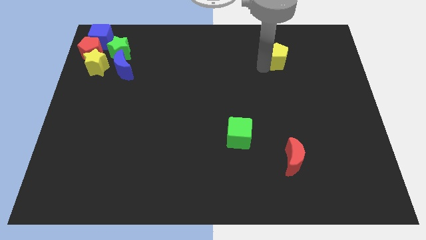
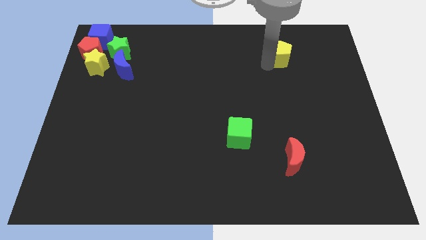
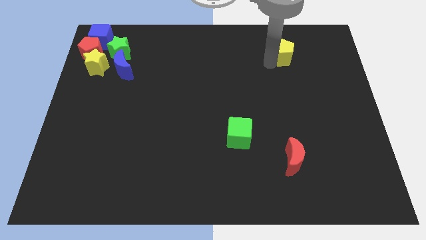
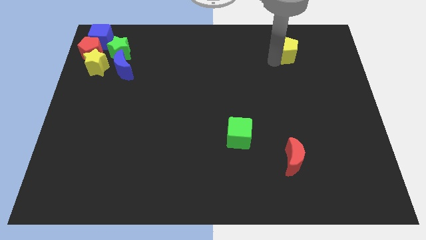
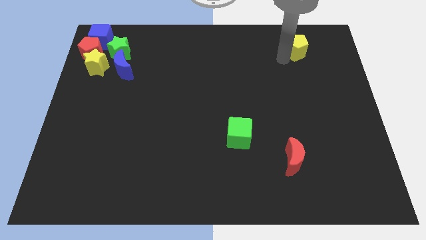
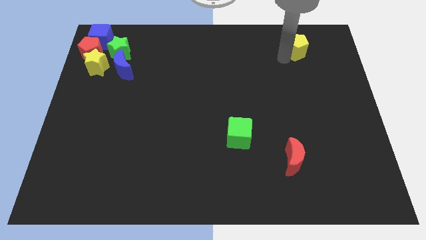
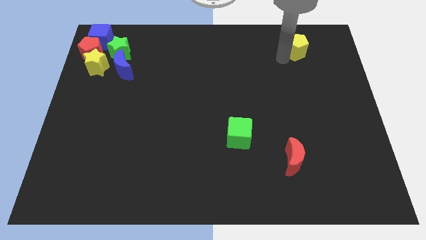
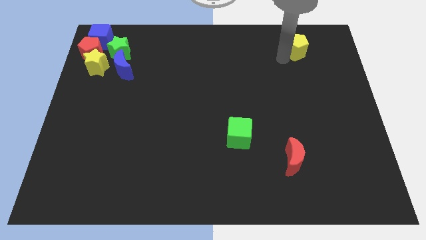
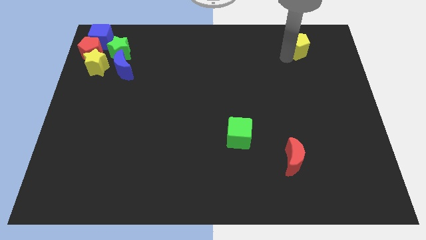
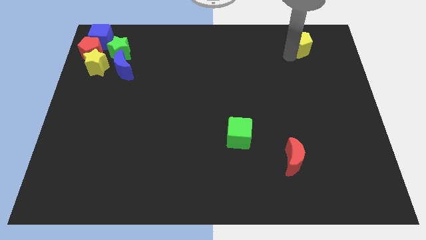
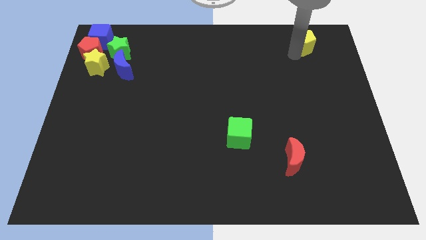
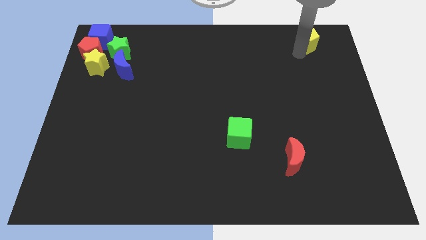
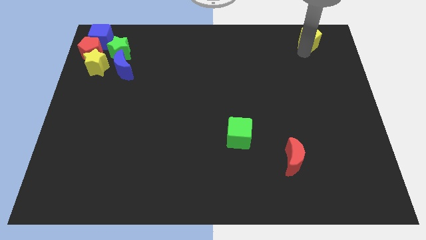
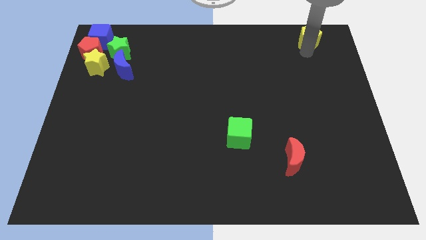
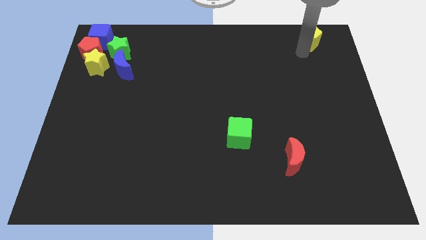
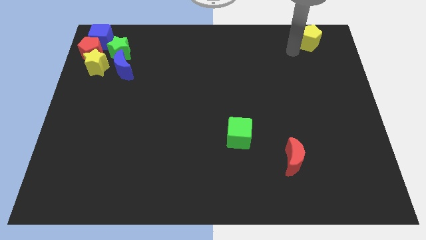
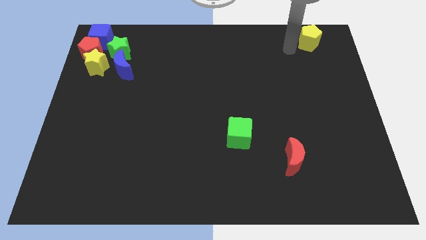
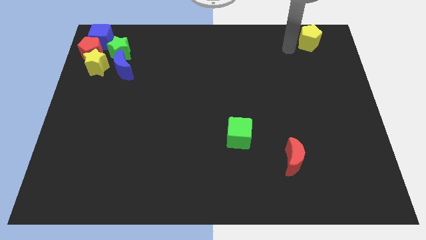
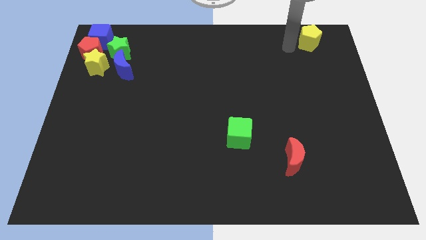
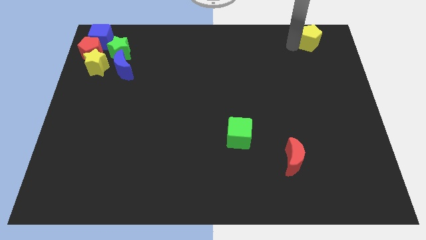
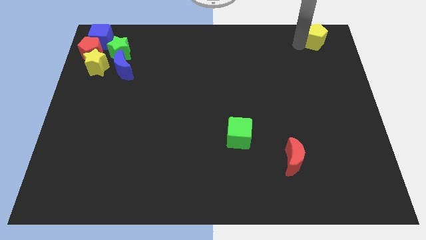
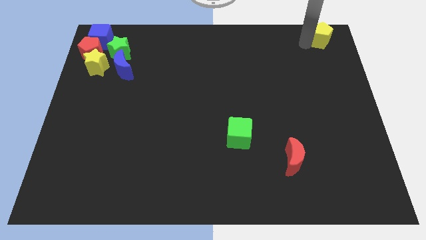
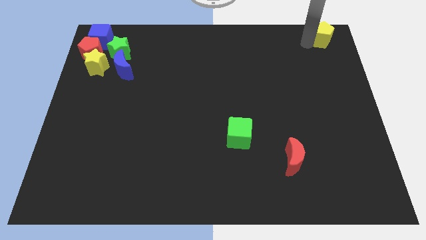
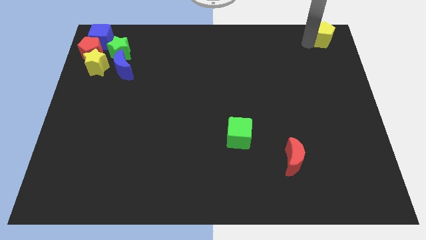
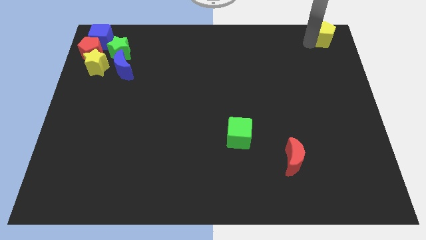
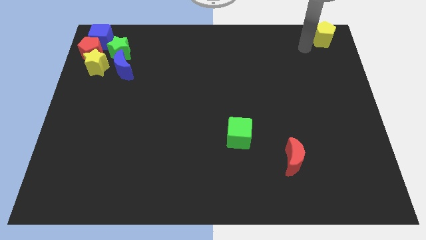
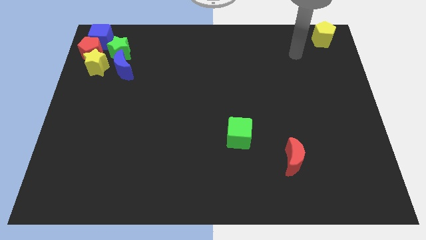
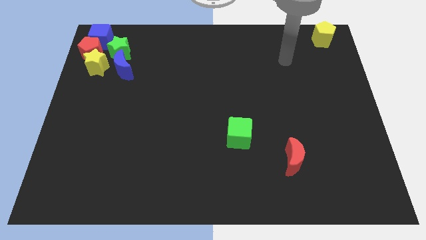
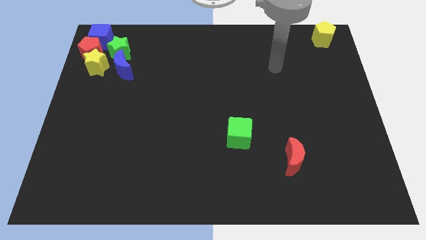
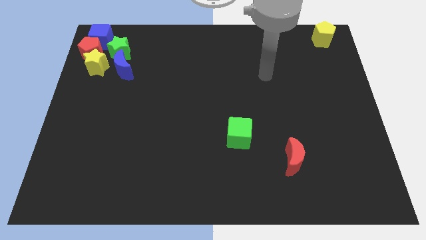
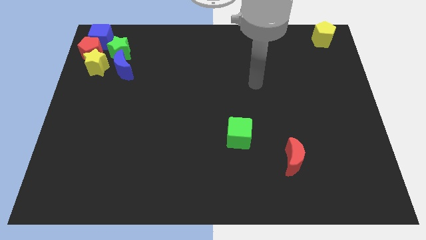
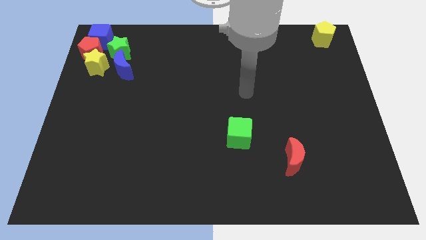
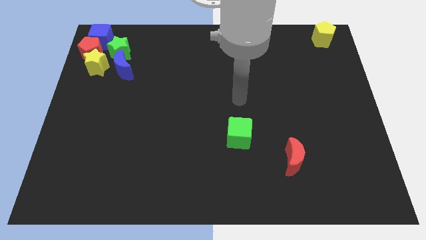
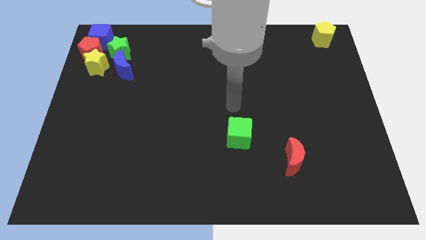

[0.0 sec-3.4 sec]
slight move the yellow pentagon to the top right

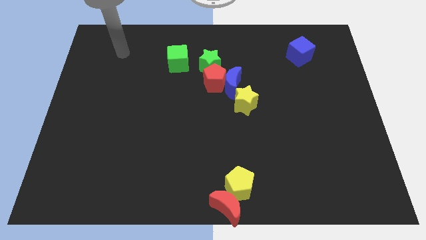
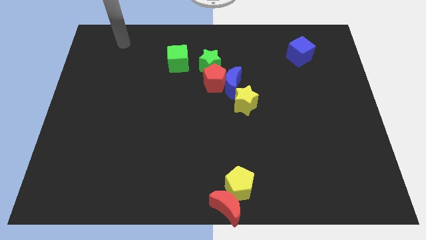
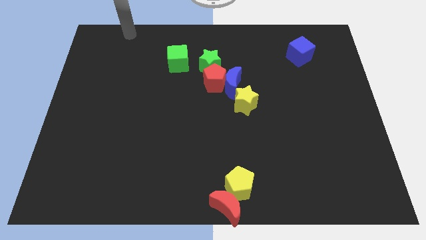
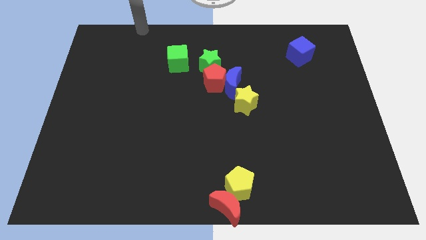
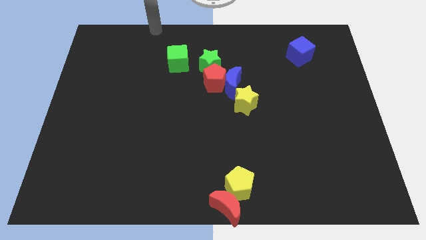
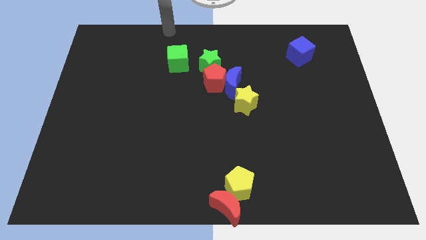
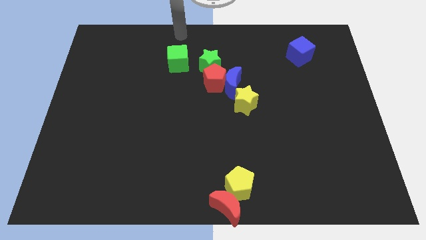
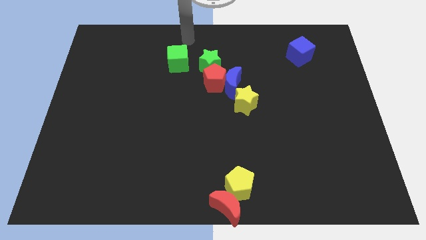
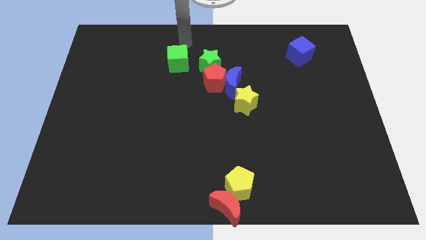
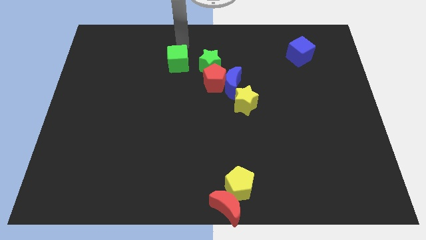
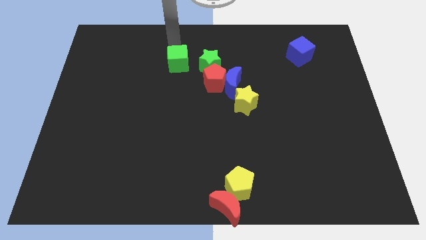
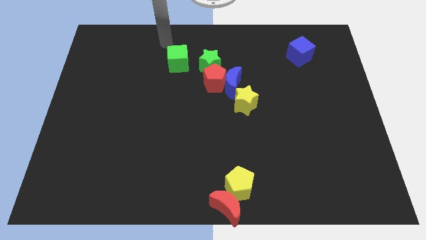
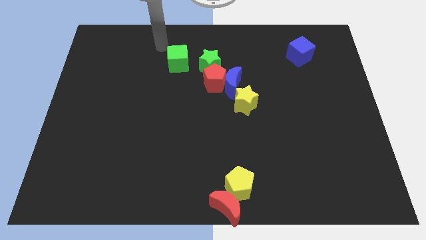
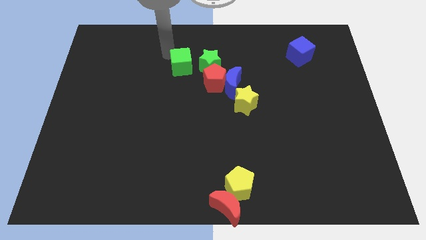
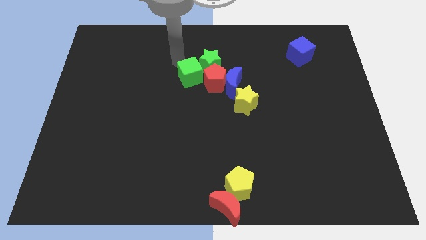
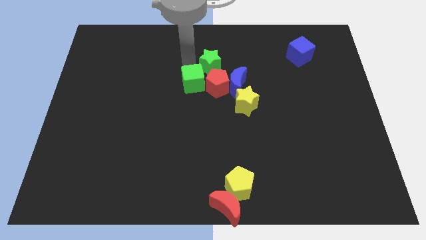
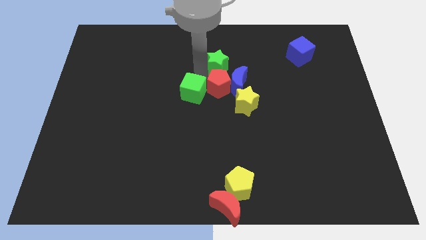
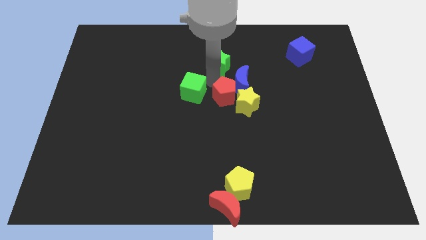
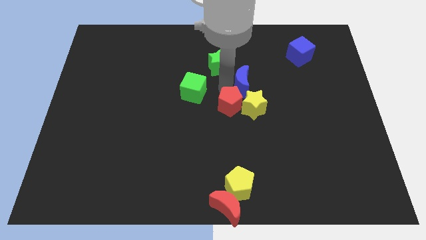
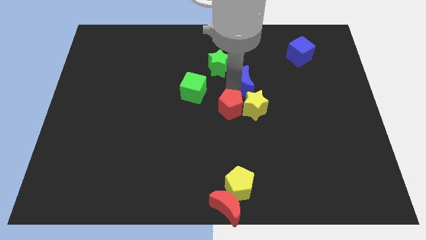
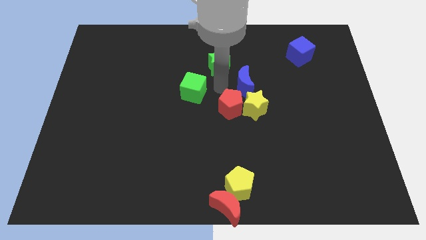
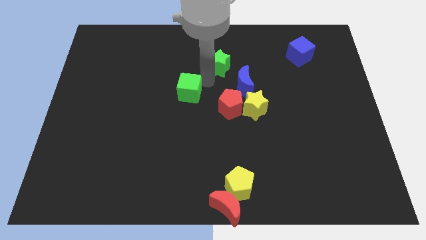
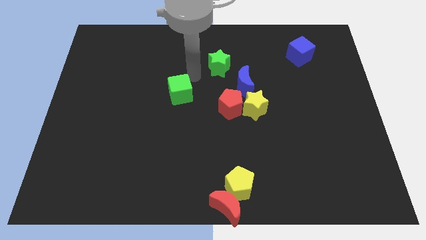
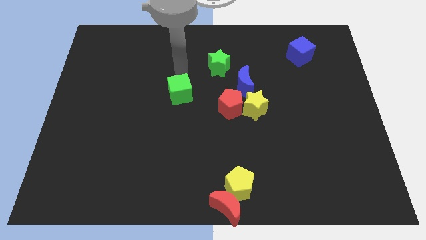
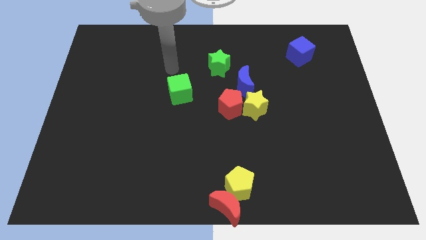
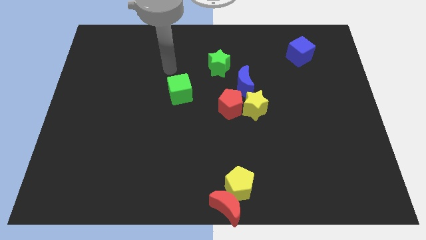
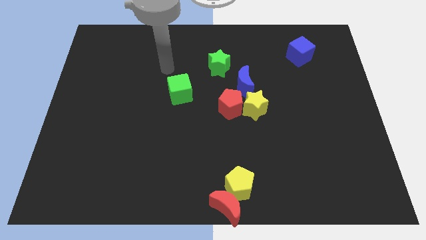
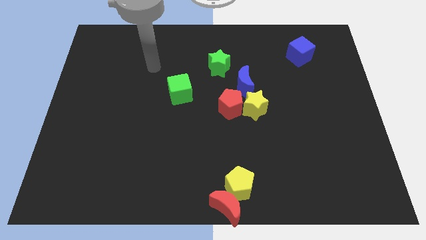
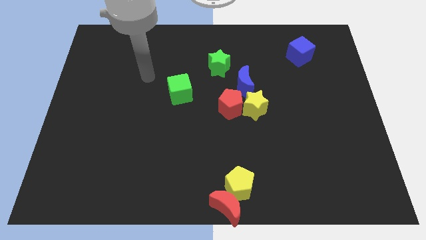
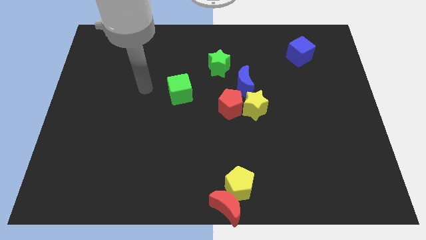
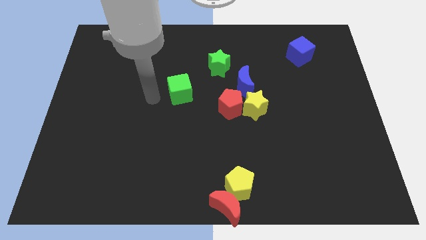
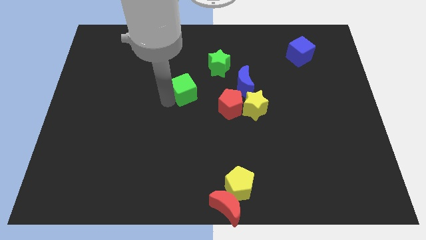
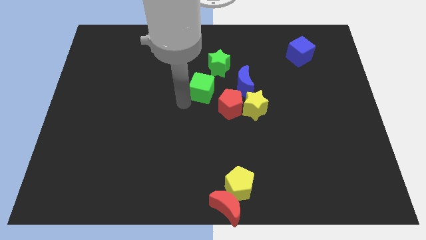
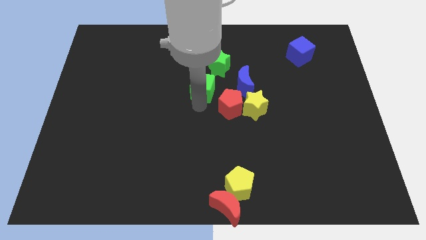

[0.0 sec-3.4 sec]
slide the green cube to the bottom left side of the green star

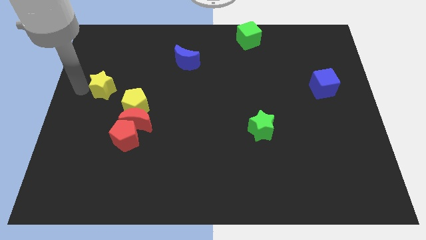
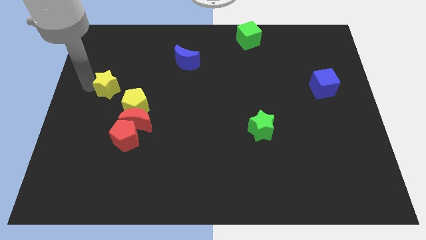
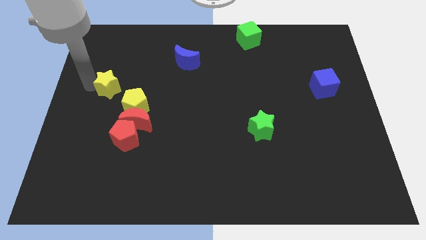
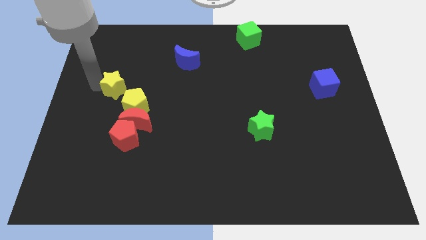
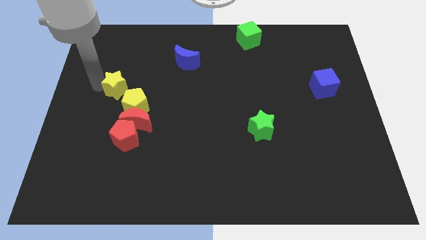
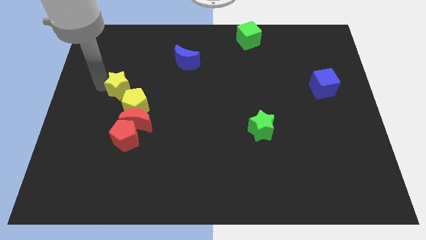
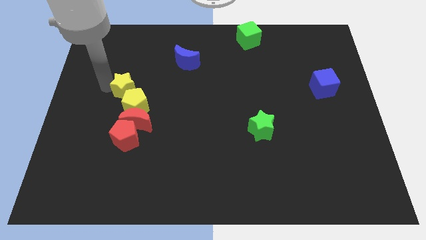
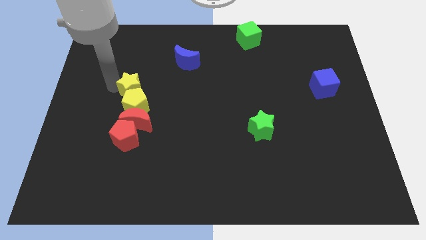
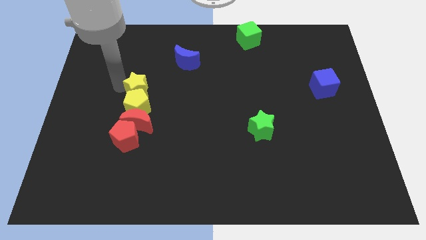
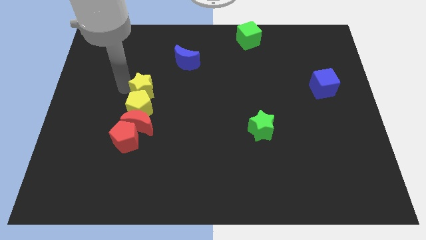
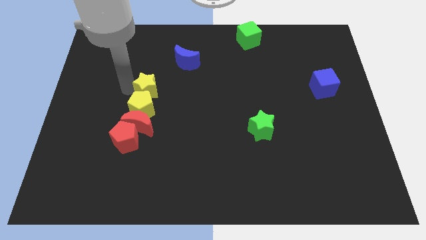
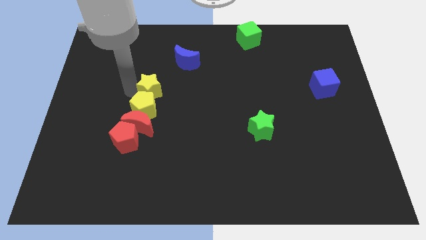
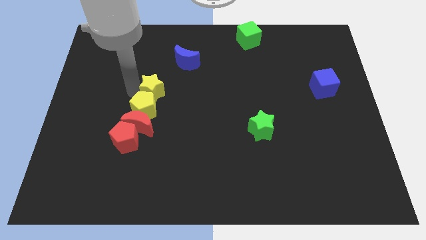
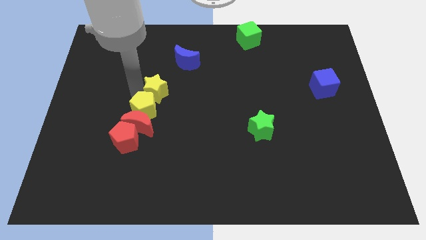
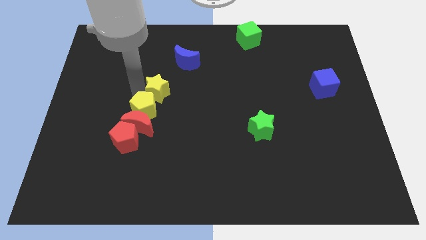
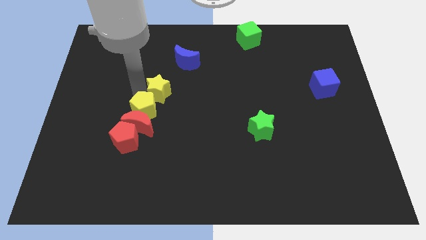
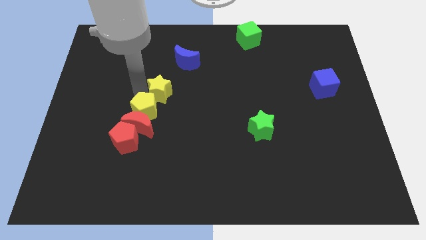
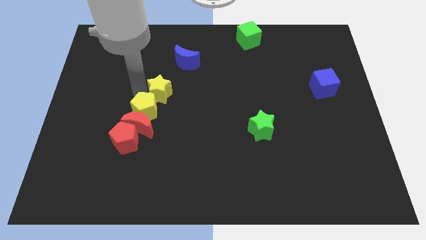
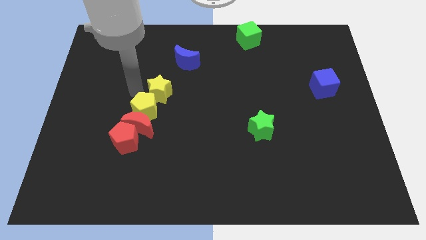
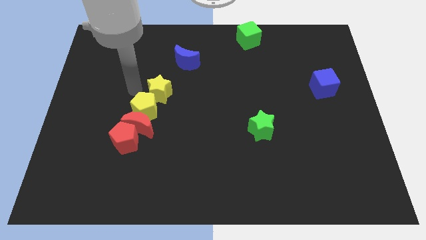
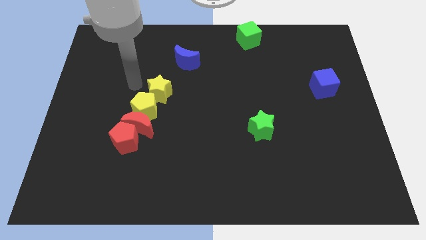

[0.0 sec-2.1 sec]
move the yellow star close to the yellow pentagon
